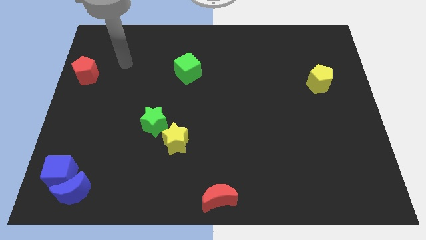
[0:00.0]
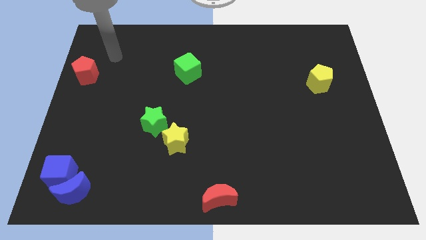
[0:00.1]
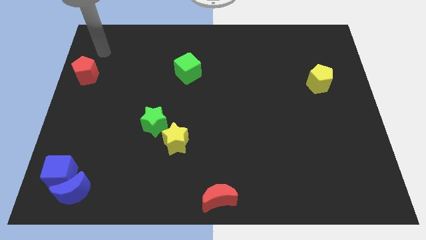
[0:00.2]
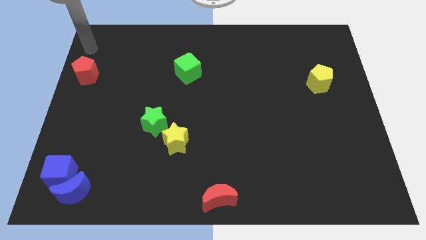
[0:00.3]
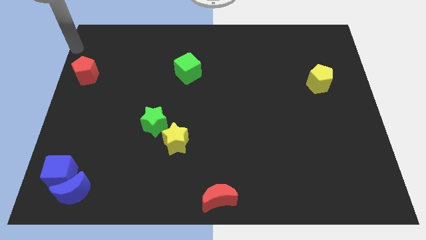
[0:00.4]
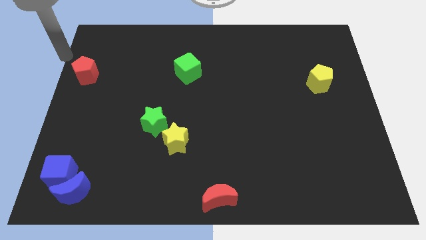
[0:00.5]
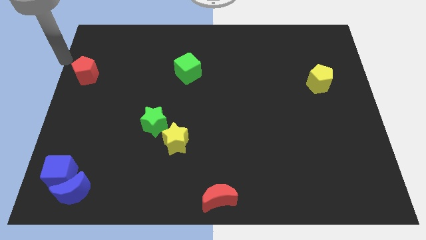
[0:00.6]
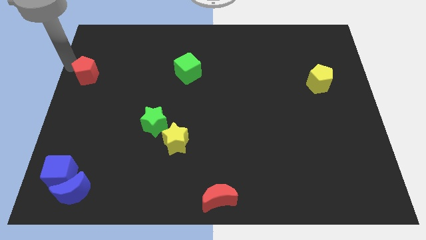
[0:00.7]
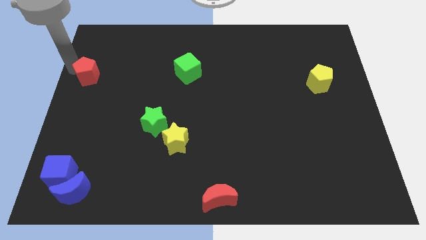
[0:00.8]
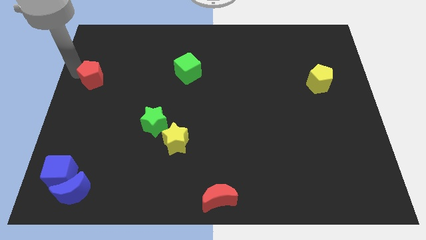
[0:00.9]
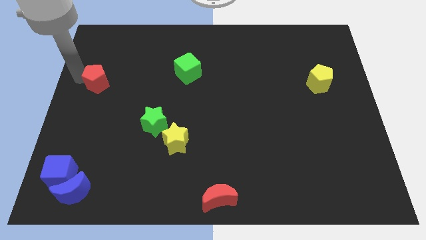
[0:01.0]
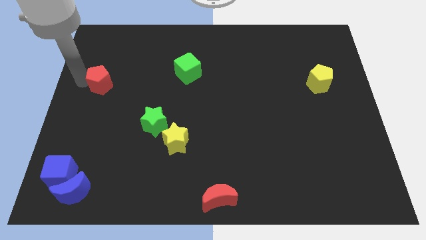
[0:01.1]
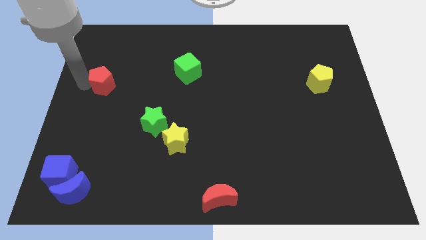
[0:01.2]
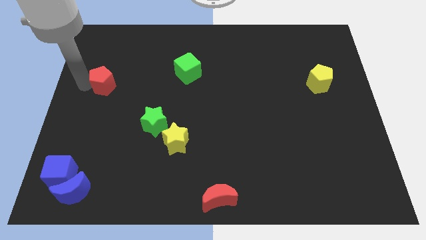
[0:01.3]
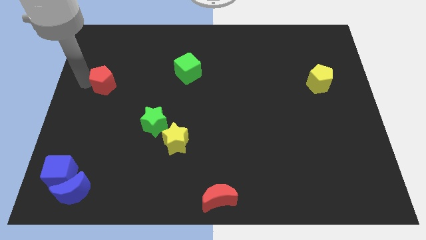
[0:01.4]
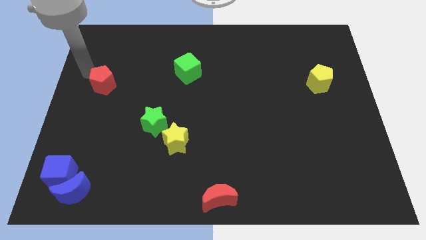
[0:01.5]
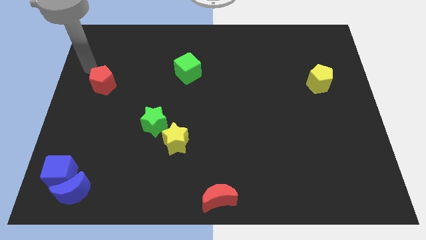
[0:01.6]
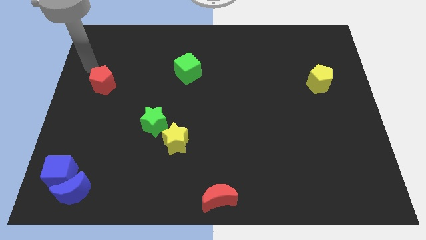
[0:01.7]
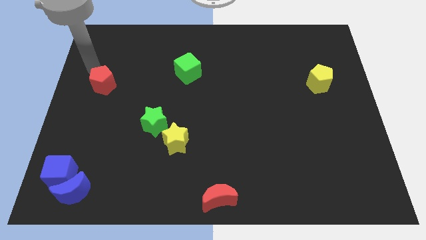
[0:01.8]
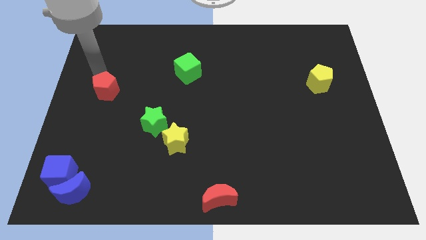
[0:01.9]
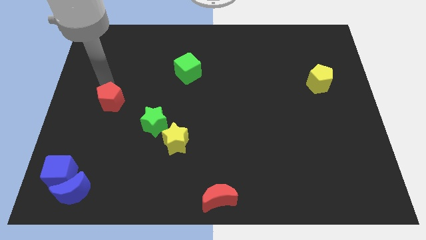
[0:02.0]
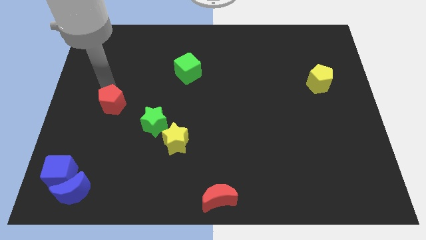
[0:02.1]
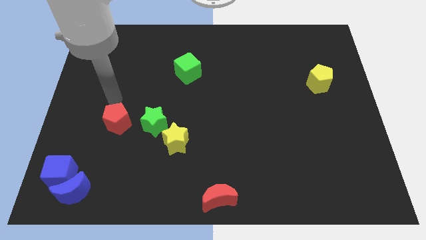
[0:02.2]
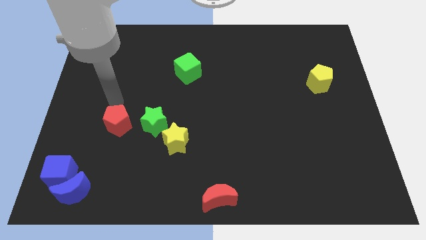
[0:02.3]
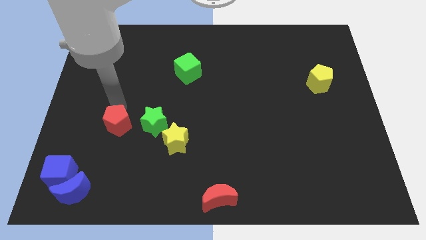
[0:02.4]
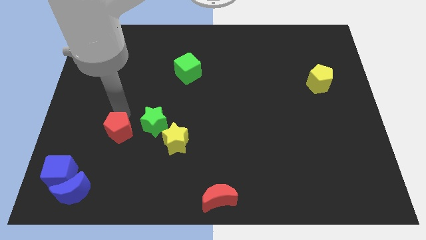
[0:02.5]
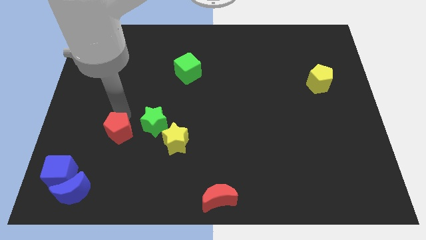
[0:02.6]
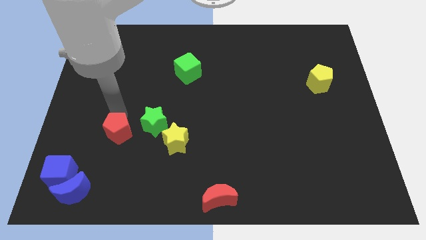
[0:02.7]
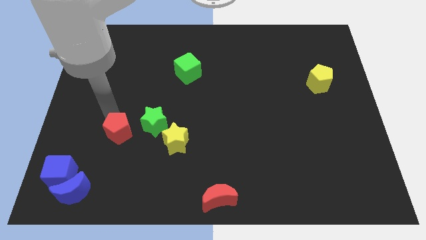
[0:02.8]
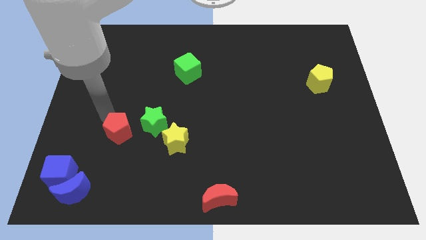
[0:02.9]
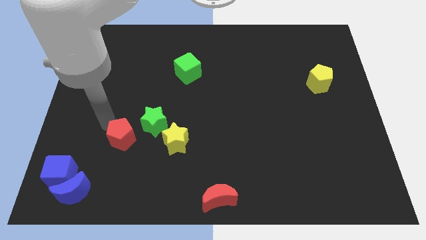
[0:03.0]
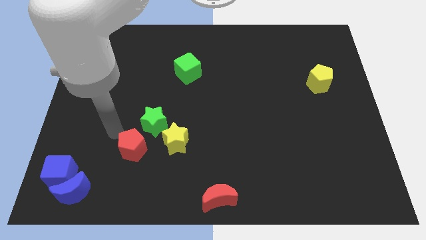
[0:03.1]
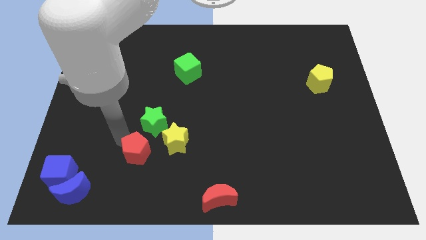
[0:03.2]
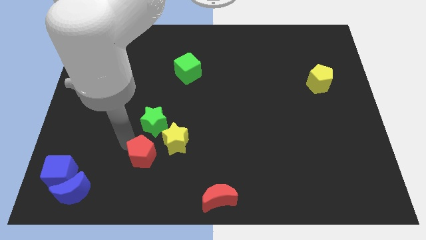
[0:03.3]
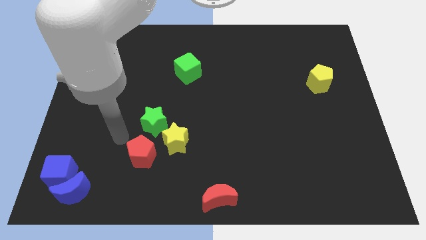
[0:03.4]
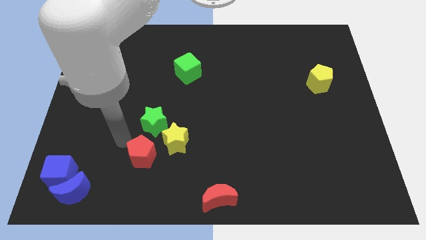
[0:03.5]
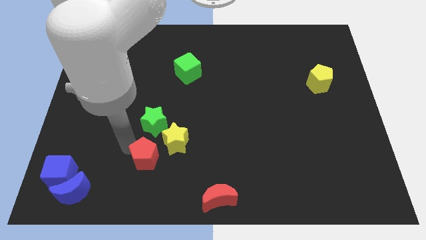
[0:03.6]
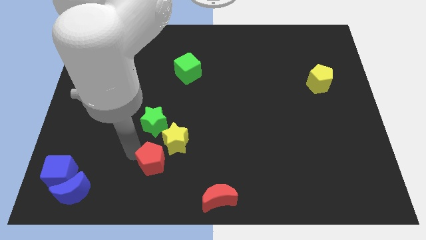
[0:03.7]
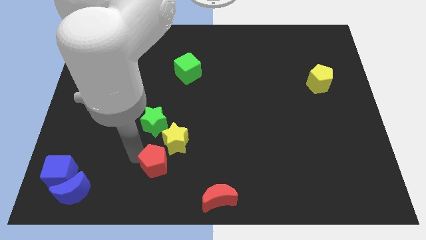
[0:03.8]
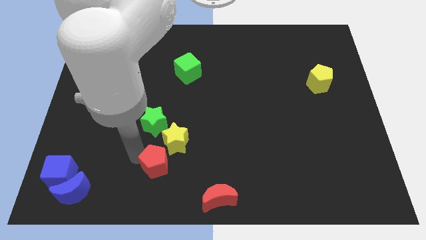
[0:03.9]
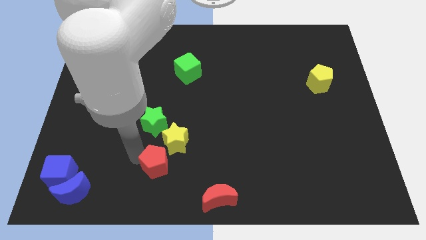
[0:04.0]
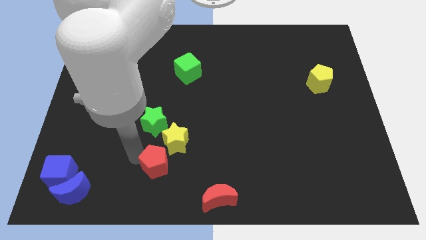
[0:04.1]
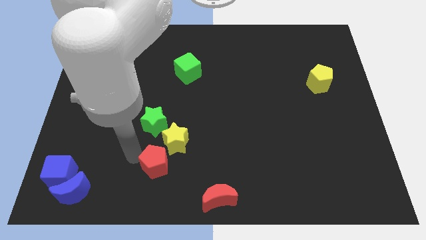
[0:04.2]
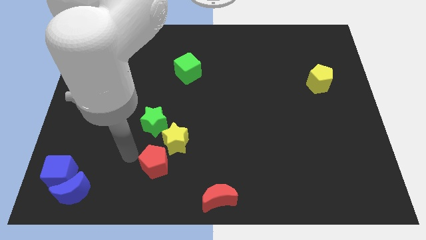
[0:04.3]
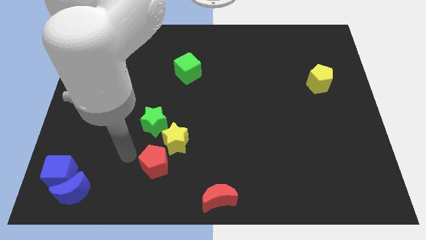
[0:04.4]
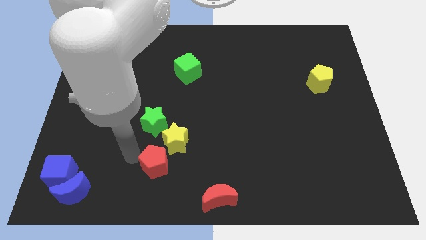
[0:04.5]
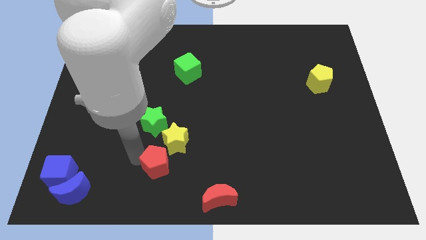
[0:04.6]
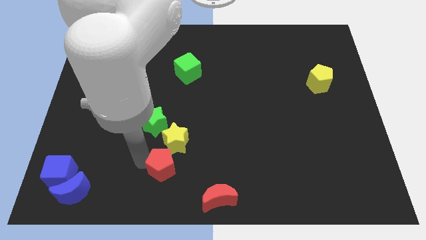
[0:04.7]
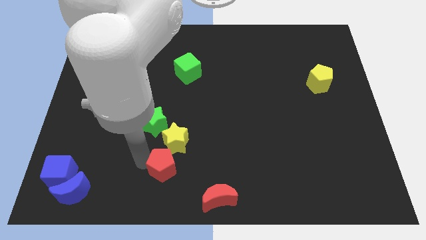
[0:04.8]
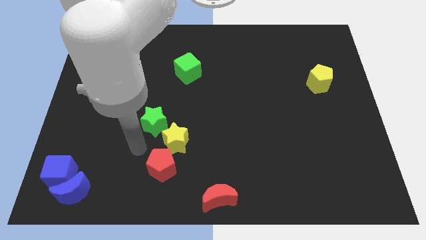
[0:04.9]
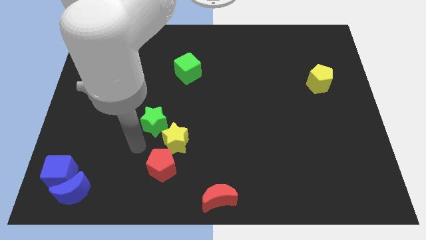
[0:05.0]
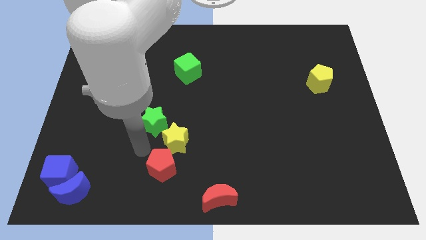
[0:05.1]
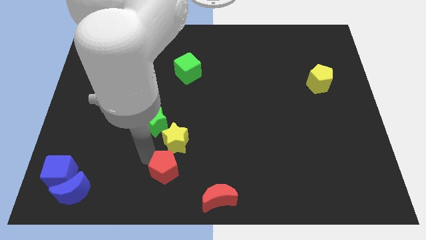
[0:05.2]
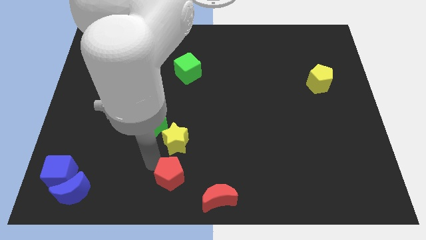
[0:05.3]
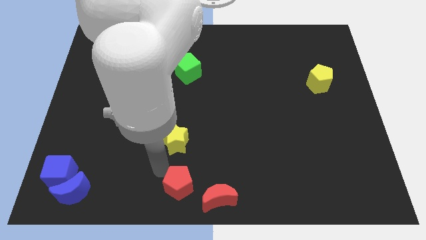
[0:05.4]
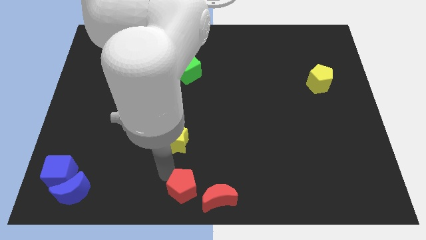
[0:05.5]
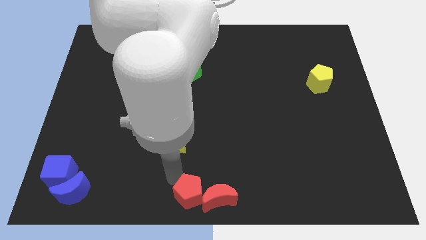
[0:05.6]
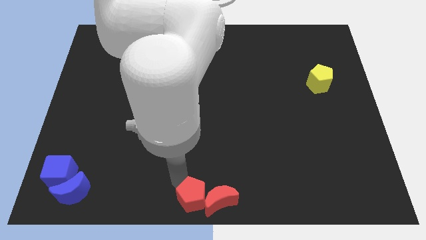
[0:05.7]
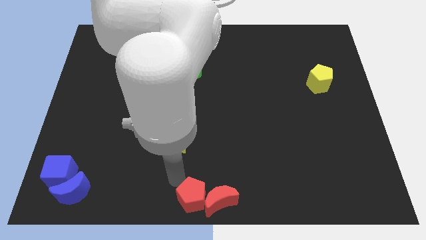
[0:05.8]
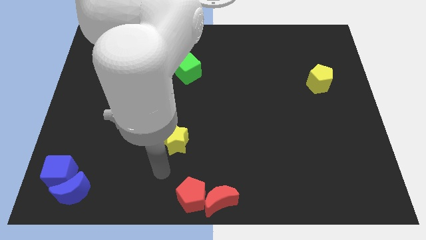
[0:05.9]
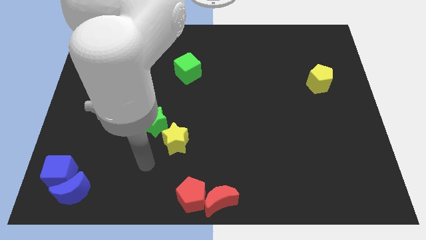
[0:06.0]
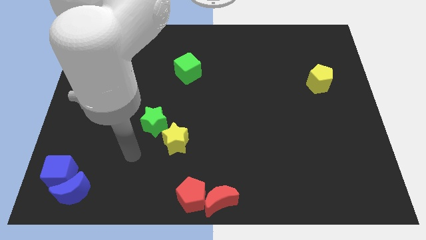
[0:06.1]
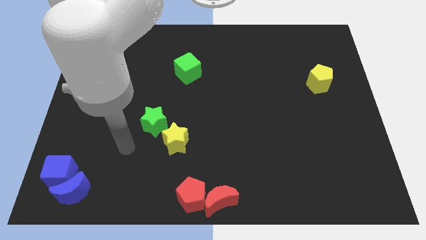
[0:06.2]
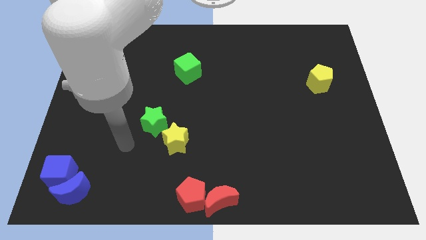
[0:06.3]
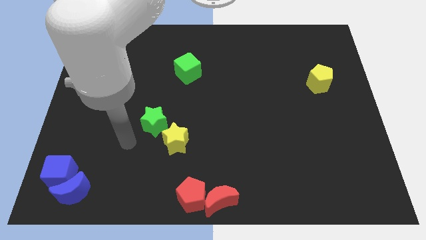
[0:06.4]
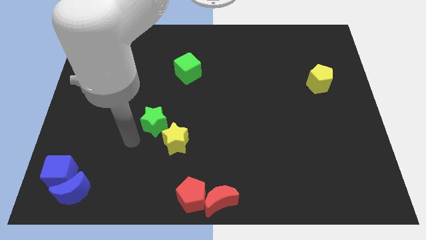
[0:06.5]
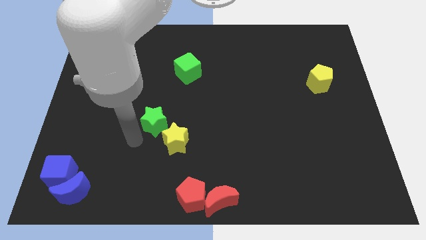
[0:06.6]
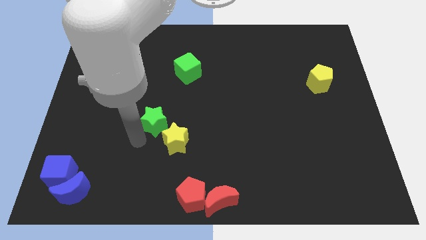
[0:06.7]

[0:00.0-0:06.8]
move the red pentagon into red crescent

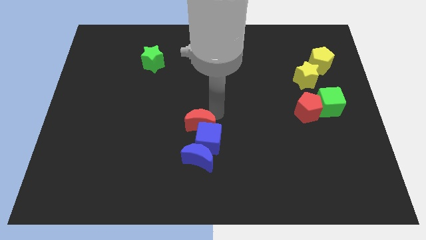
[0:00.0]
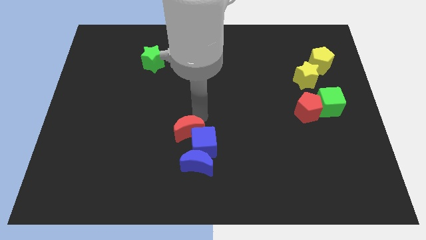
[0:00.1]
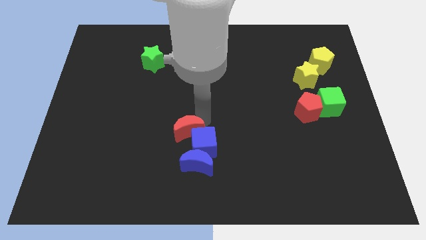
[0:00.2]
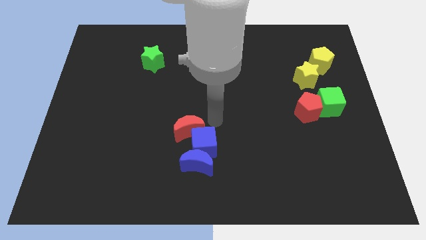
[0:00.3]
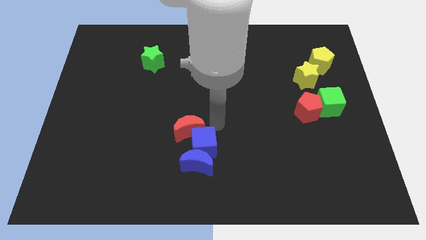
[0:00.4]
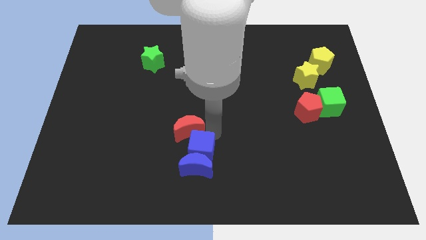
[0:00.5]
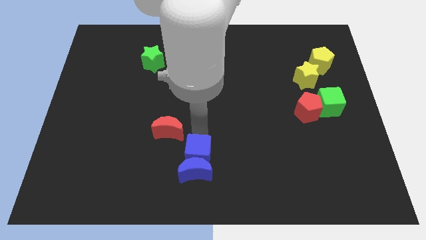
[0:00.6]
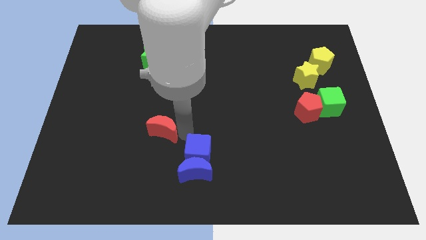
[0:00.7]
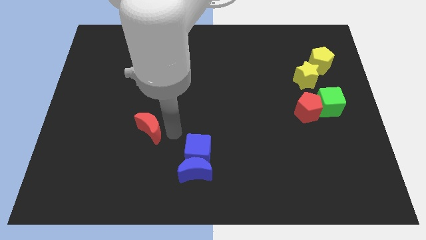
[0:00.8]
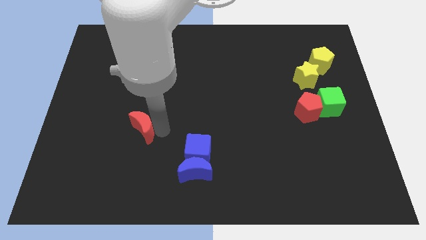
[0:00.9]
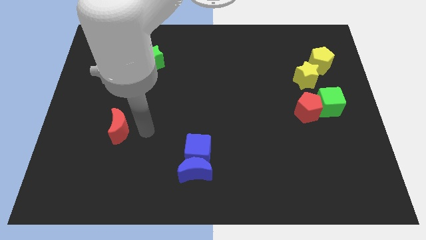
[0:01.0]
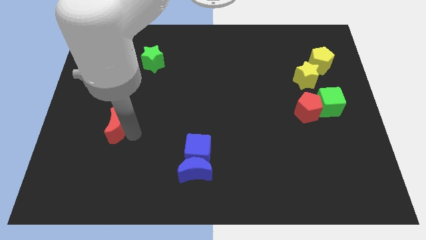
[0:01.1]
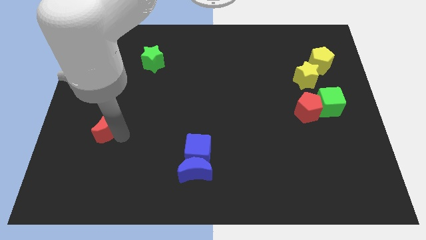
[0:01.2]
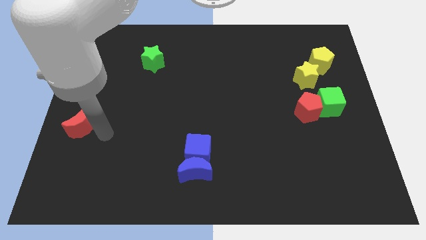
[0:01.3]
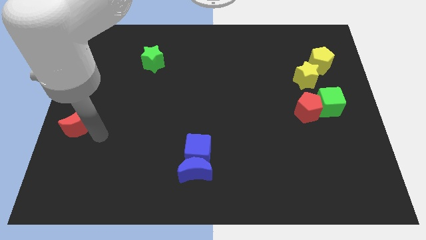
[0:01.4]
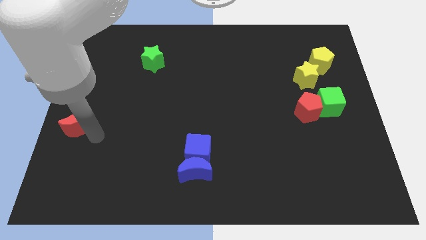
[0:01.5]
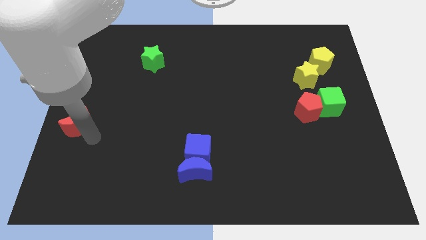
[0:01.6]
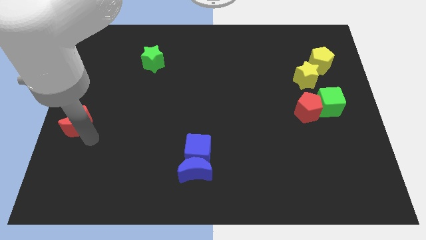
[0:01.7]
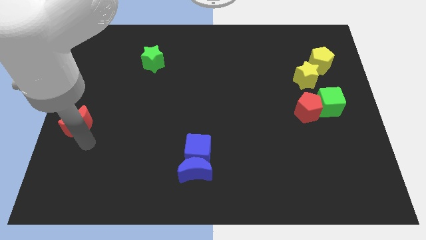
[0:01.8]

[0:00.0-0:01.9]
move the red moon to the left side of the table
